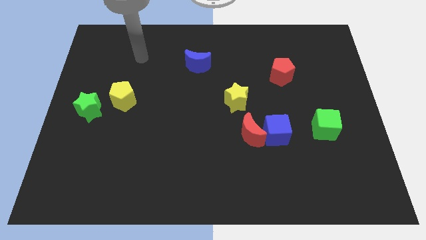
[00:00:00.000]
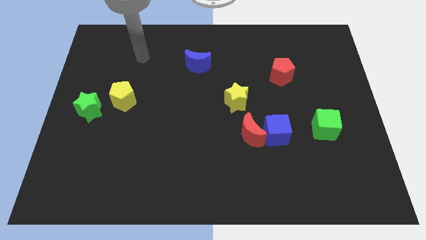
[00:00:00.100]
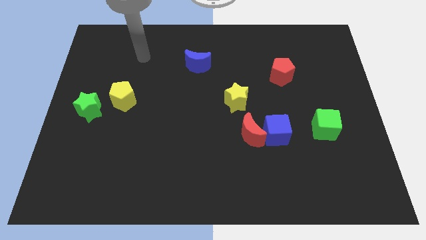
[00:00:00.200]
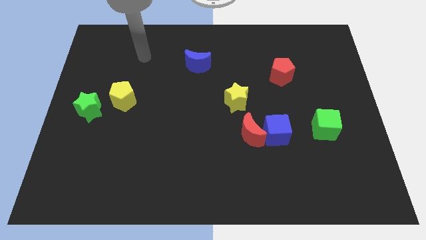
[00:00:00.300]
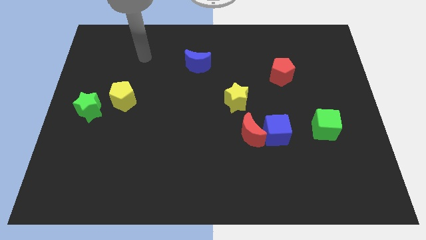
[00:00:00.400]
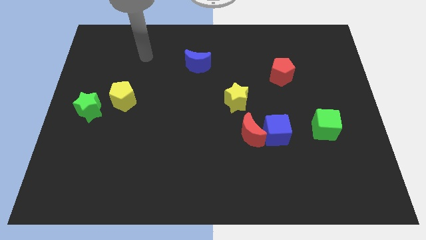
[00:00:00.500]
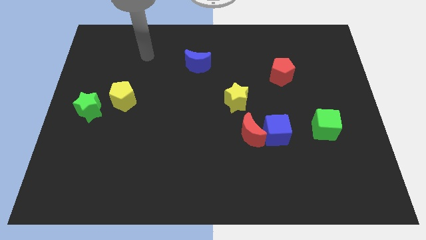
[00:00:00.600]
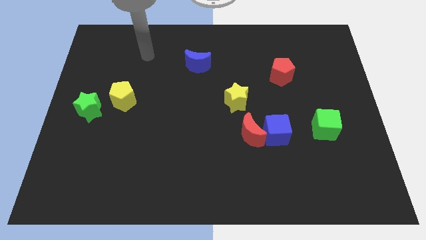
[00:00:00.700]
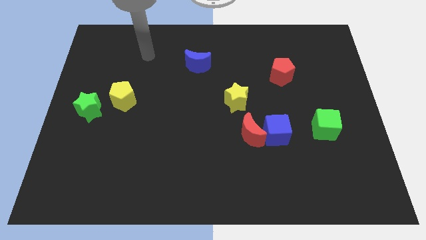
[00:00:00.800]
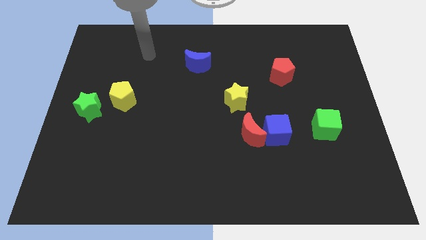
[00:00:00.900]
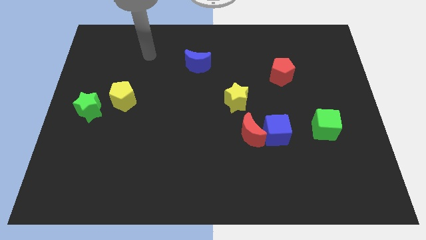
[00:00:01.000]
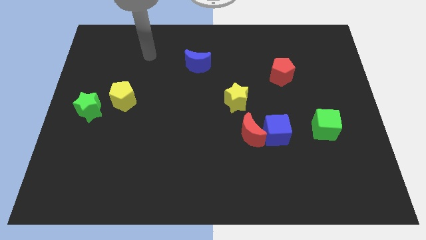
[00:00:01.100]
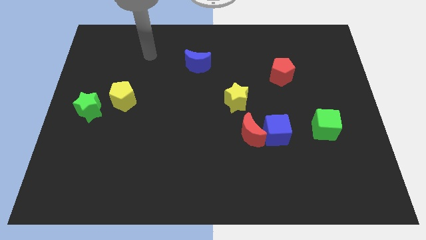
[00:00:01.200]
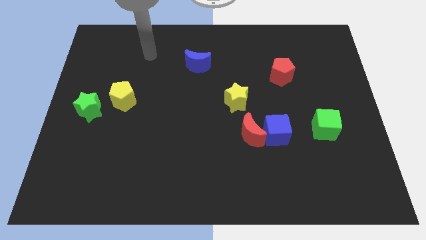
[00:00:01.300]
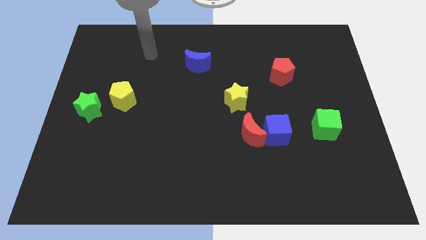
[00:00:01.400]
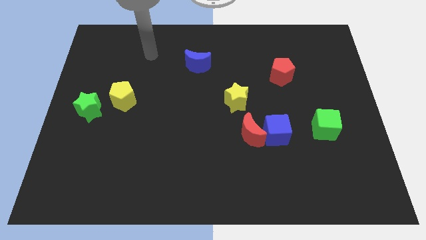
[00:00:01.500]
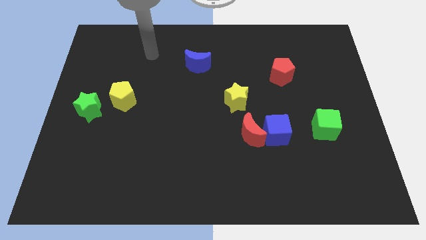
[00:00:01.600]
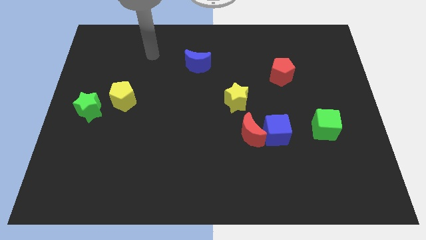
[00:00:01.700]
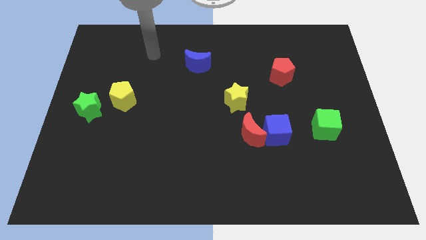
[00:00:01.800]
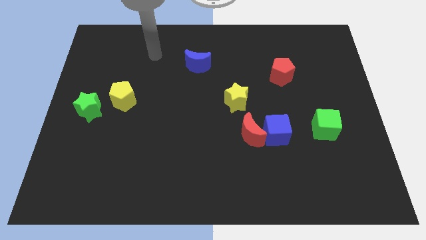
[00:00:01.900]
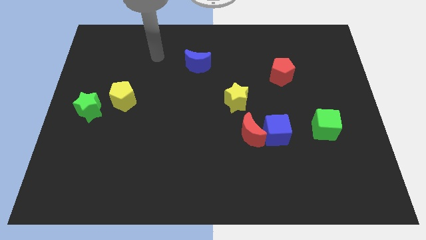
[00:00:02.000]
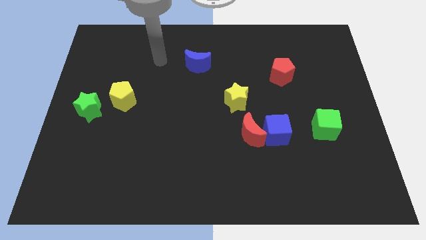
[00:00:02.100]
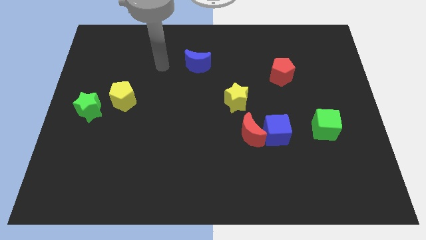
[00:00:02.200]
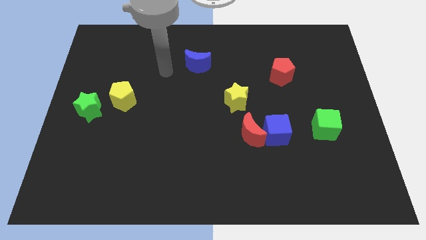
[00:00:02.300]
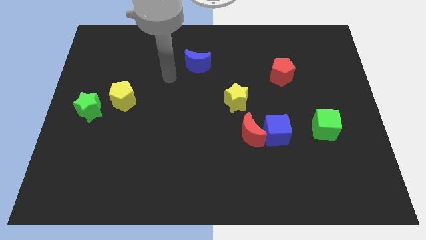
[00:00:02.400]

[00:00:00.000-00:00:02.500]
place your arm left to blue cube

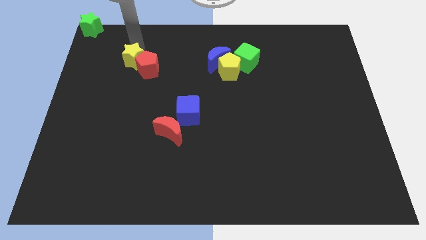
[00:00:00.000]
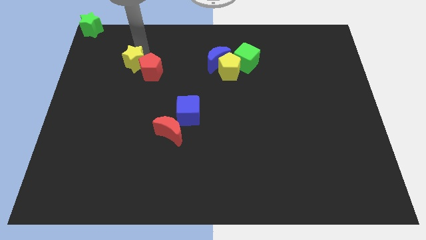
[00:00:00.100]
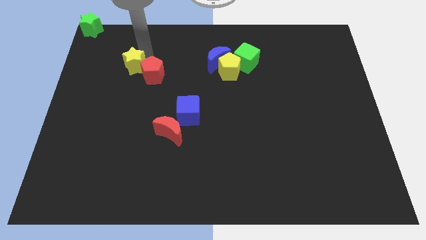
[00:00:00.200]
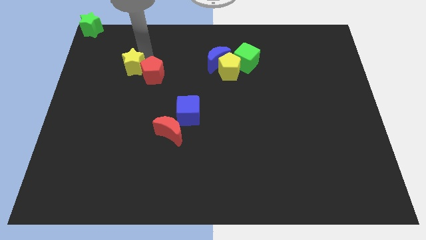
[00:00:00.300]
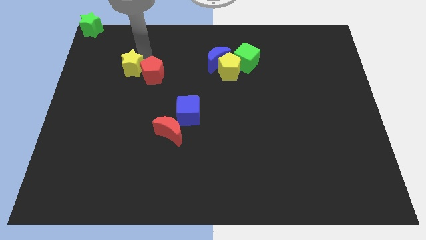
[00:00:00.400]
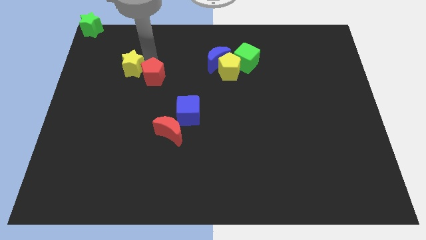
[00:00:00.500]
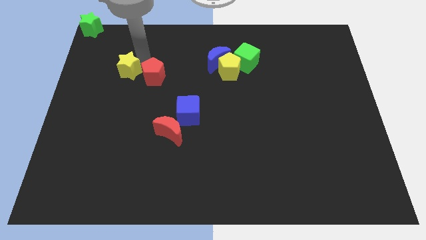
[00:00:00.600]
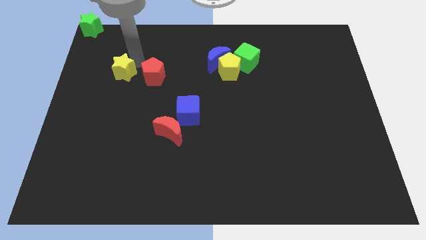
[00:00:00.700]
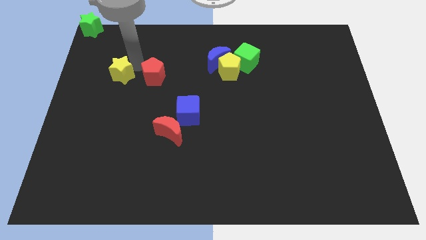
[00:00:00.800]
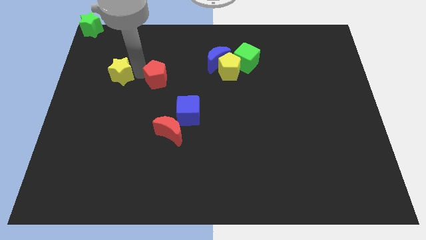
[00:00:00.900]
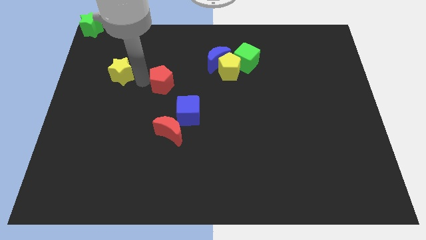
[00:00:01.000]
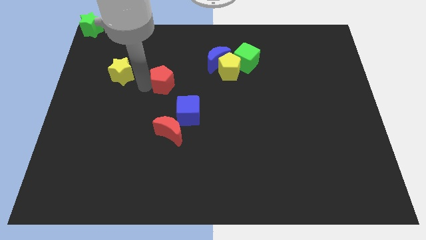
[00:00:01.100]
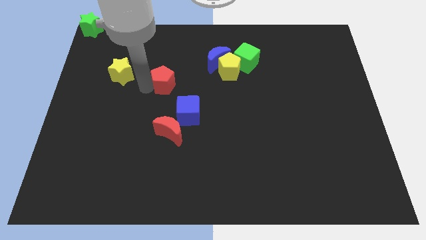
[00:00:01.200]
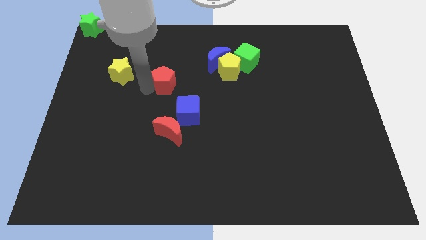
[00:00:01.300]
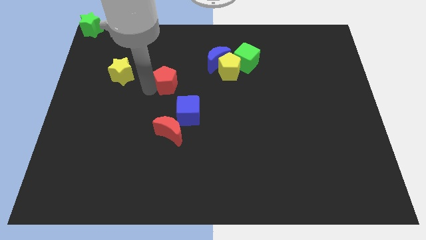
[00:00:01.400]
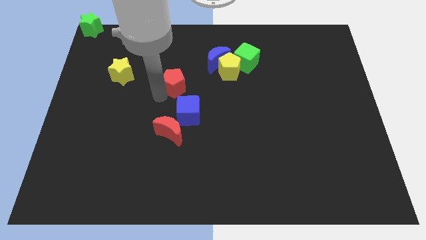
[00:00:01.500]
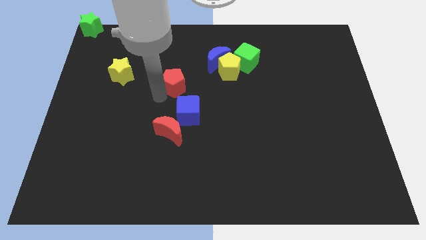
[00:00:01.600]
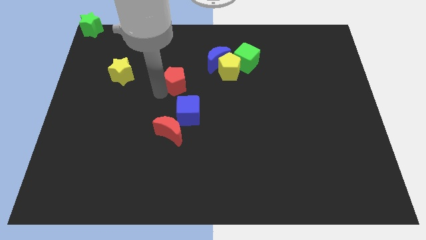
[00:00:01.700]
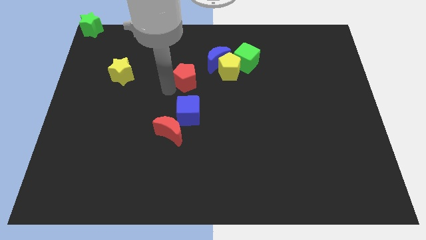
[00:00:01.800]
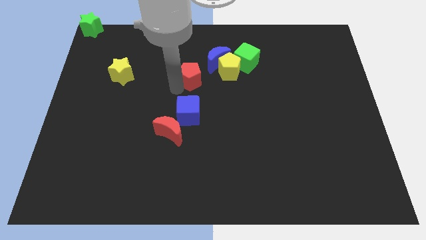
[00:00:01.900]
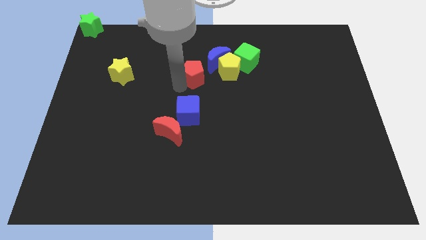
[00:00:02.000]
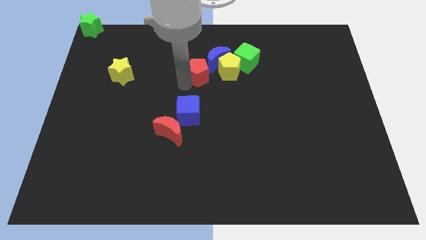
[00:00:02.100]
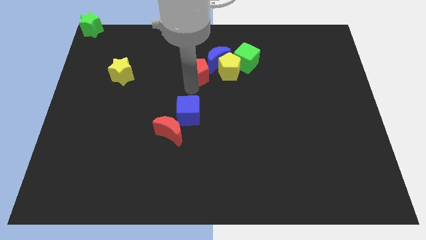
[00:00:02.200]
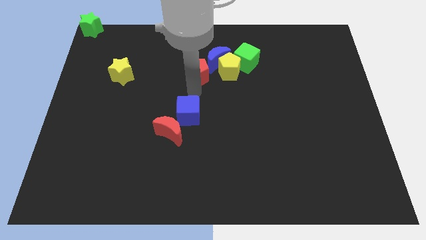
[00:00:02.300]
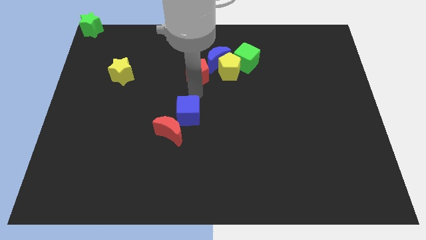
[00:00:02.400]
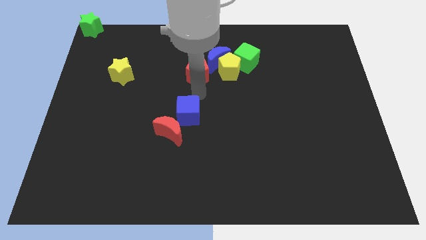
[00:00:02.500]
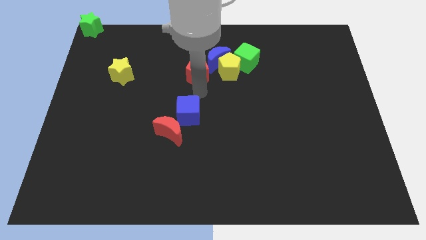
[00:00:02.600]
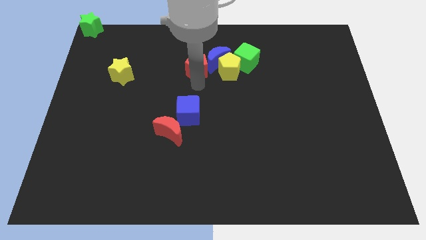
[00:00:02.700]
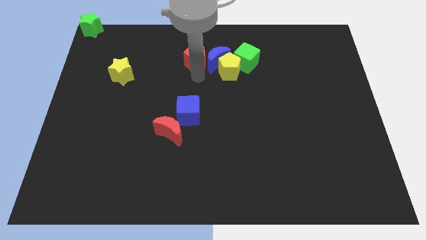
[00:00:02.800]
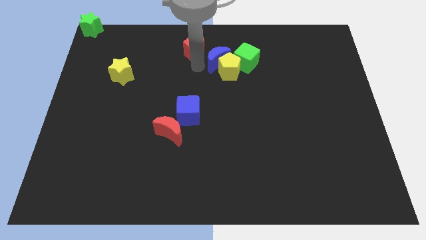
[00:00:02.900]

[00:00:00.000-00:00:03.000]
push the red pentagon left to the blue moon

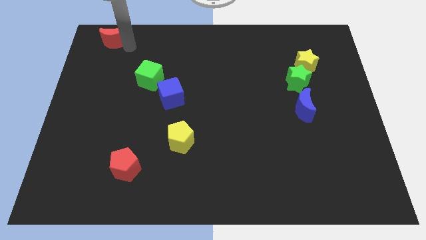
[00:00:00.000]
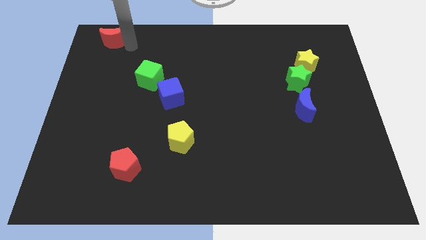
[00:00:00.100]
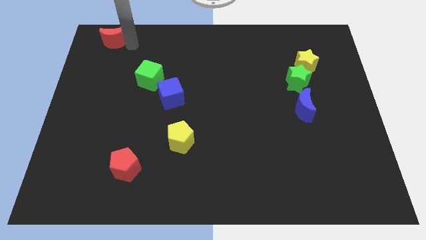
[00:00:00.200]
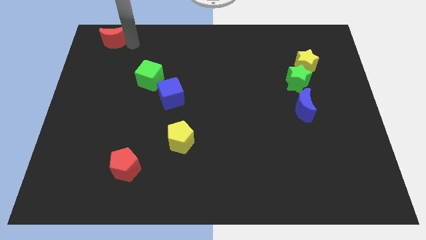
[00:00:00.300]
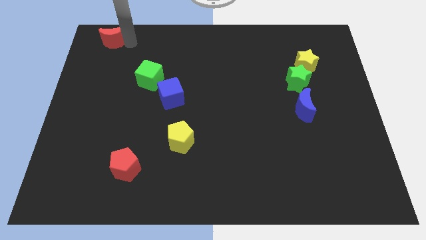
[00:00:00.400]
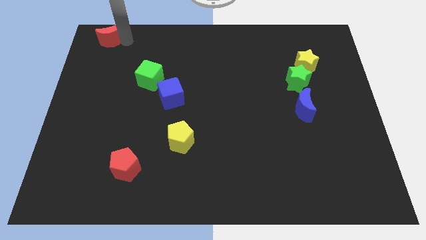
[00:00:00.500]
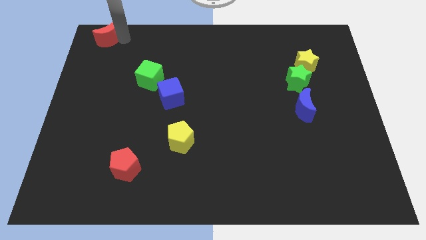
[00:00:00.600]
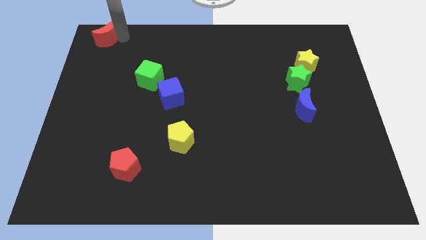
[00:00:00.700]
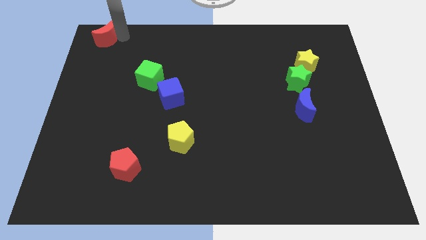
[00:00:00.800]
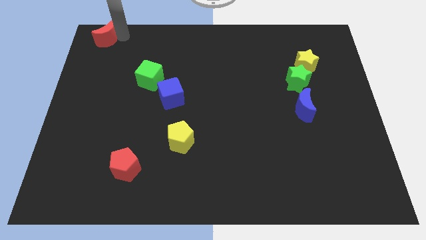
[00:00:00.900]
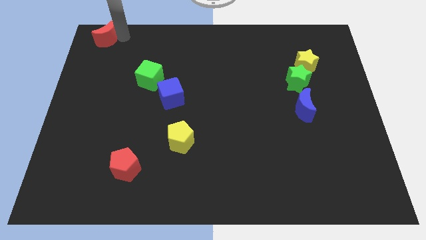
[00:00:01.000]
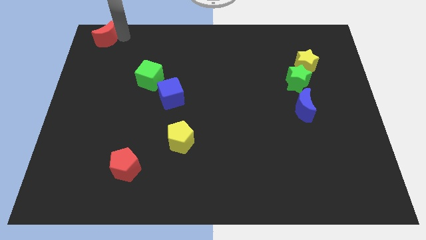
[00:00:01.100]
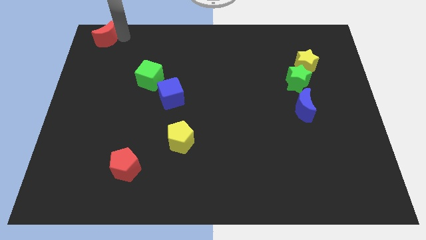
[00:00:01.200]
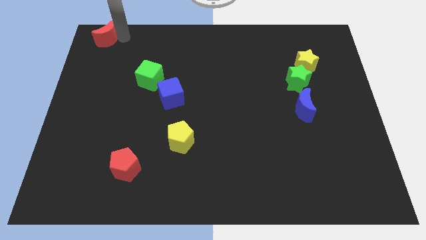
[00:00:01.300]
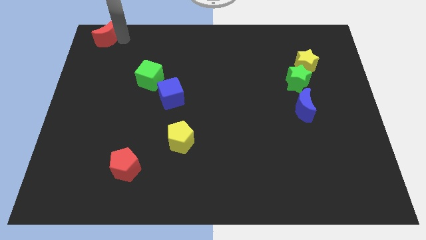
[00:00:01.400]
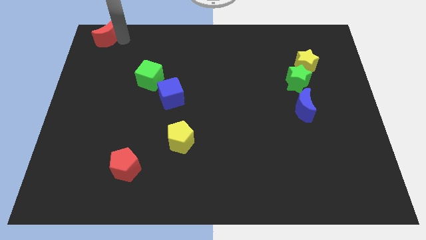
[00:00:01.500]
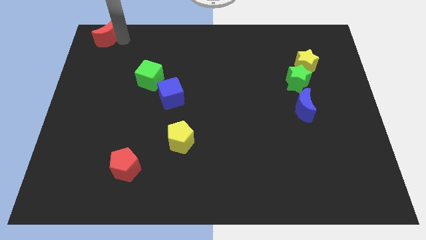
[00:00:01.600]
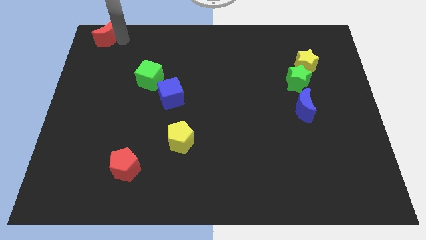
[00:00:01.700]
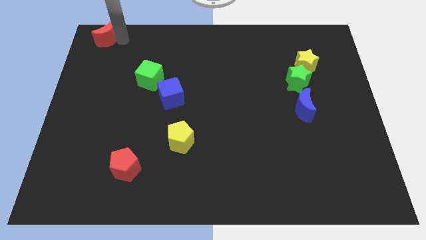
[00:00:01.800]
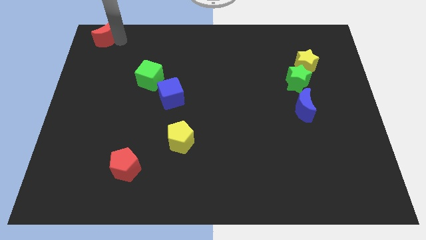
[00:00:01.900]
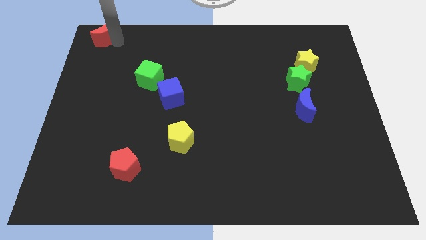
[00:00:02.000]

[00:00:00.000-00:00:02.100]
place the red crescent to the top left corner of the board

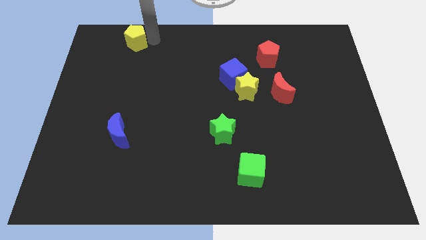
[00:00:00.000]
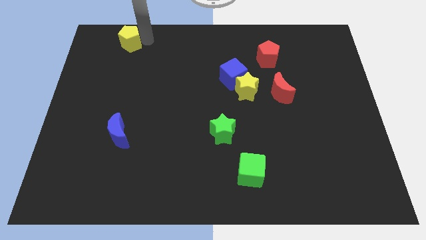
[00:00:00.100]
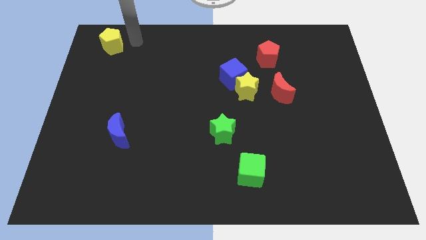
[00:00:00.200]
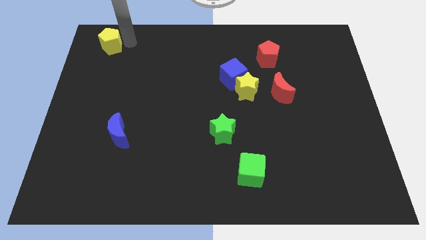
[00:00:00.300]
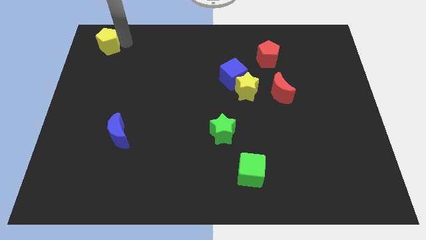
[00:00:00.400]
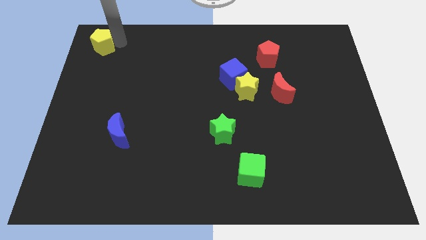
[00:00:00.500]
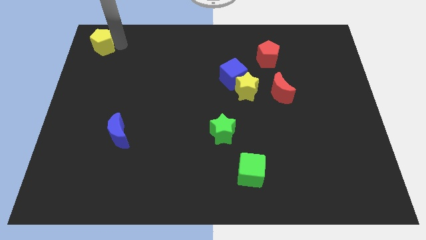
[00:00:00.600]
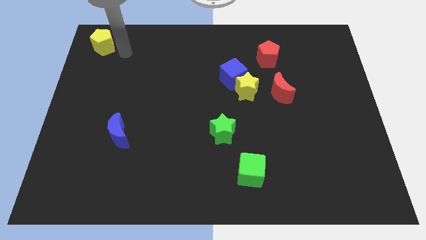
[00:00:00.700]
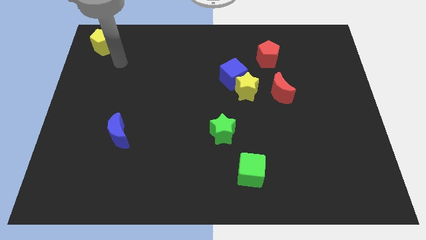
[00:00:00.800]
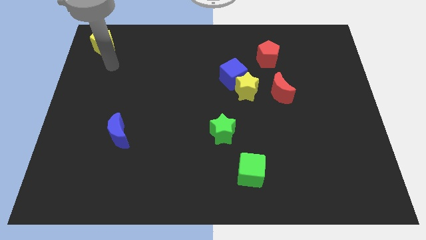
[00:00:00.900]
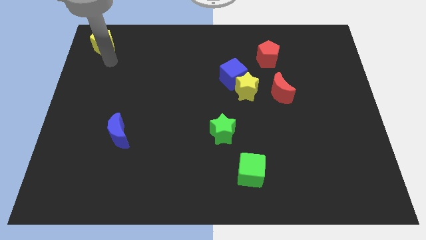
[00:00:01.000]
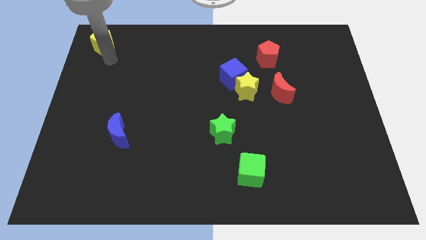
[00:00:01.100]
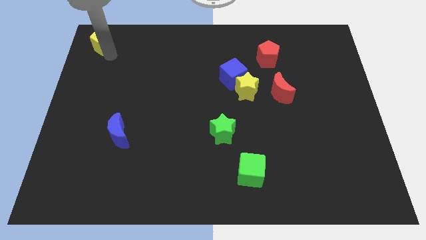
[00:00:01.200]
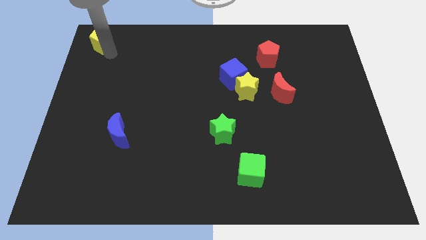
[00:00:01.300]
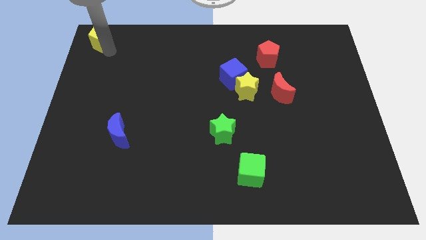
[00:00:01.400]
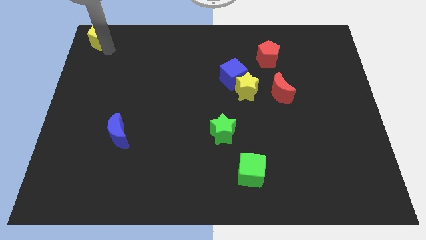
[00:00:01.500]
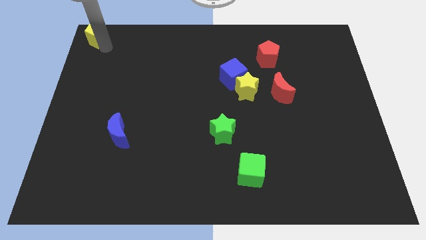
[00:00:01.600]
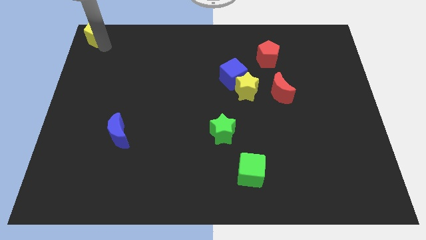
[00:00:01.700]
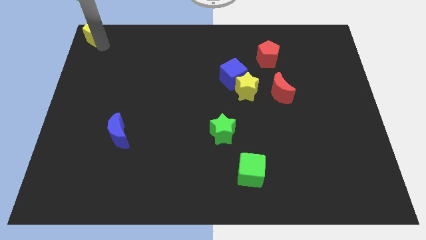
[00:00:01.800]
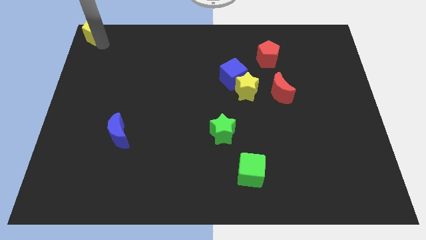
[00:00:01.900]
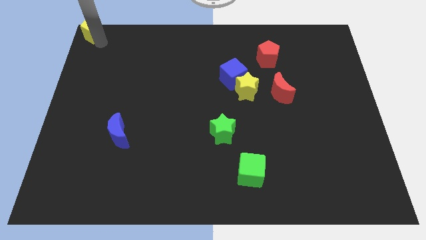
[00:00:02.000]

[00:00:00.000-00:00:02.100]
push yellow pentagon to the top left corner
